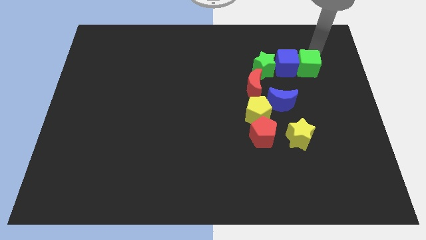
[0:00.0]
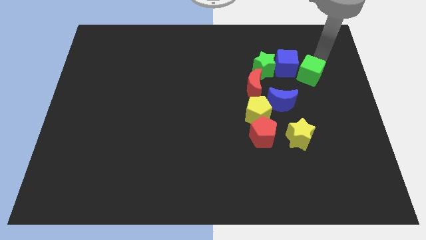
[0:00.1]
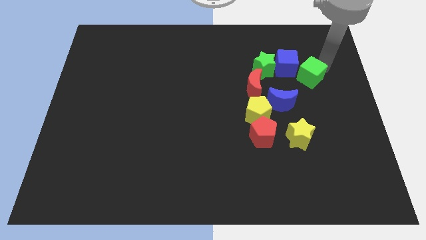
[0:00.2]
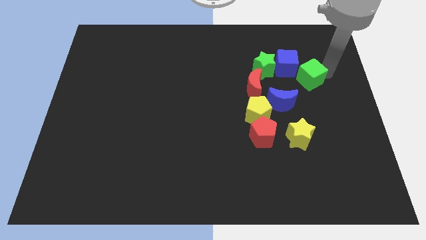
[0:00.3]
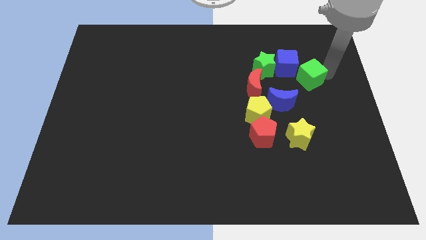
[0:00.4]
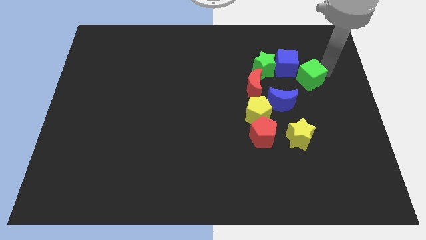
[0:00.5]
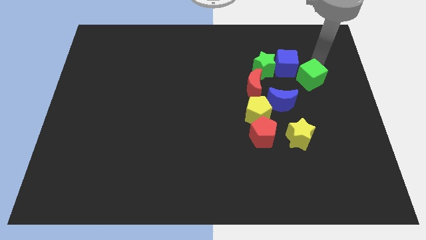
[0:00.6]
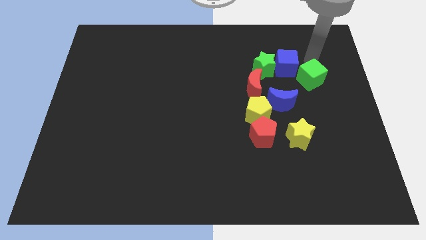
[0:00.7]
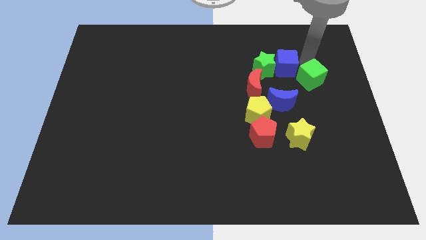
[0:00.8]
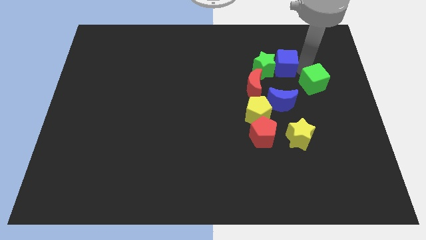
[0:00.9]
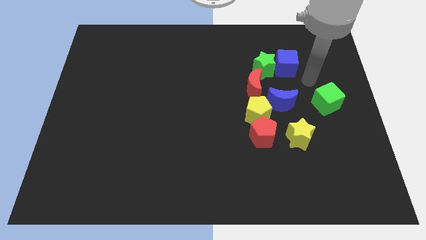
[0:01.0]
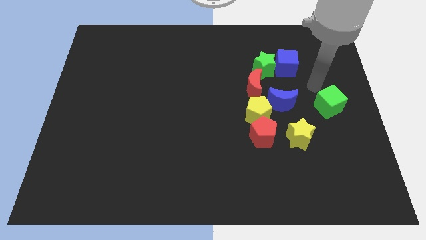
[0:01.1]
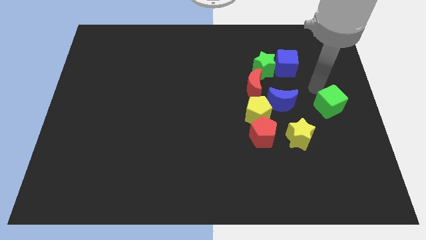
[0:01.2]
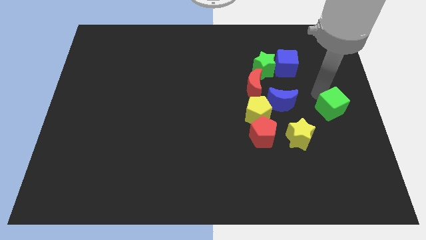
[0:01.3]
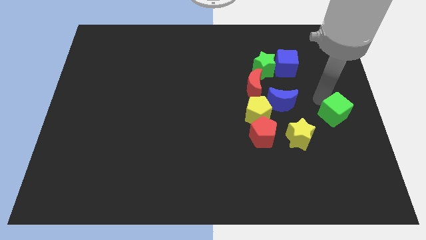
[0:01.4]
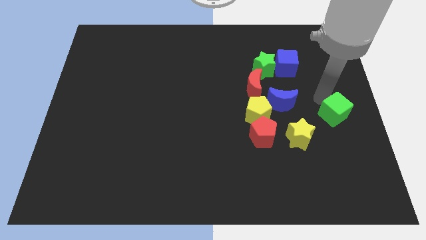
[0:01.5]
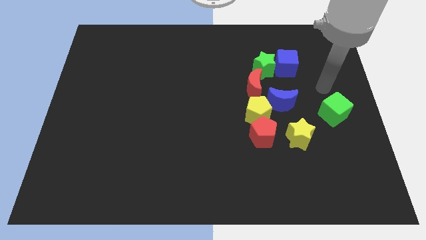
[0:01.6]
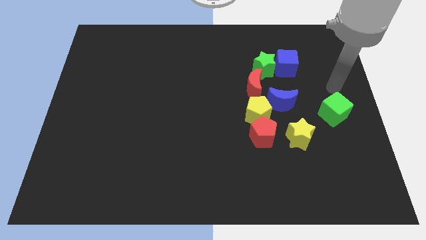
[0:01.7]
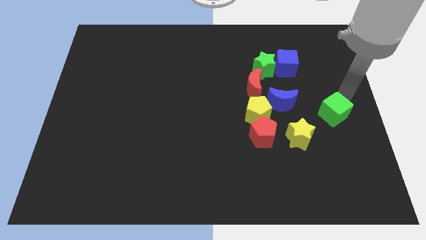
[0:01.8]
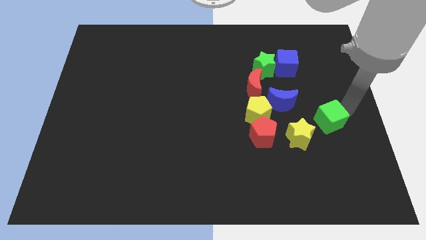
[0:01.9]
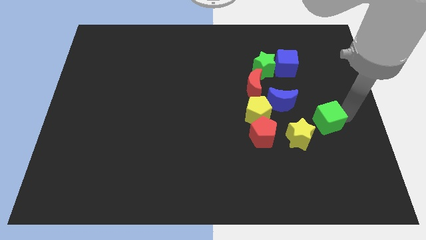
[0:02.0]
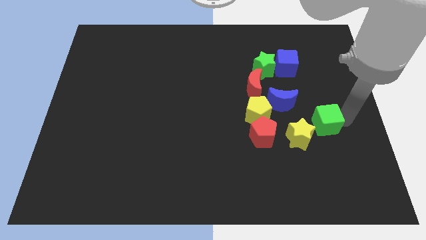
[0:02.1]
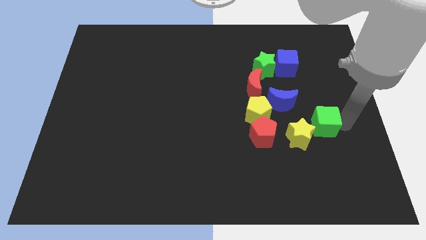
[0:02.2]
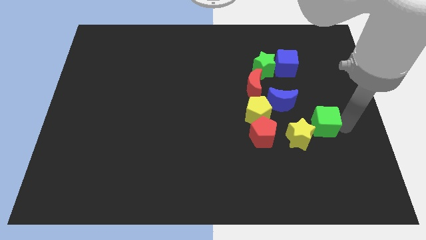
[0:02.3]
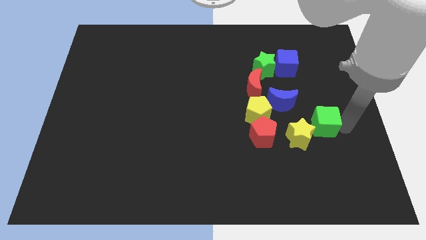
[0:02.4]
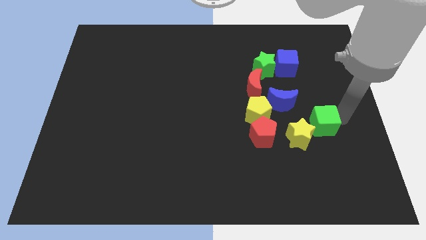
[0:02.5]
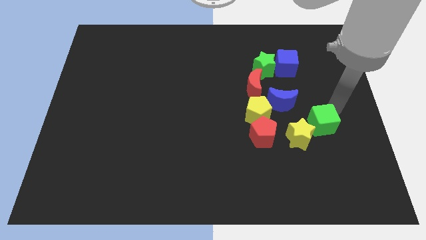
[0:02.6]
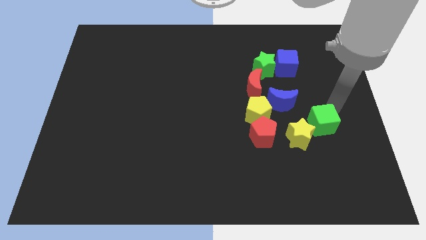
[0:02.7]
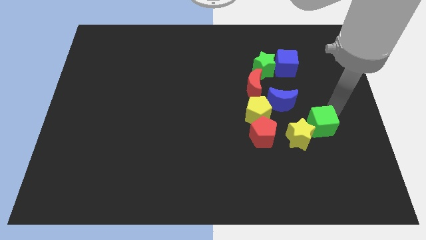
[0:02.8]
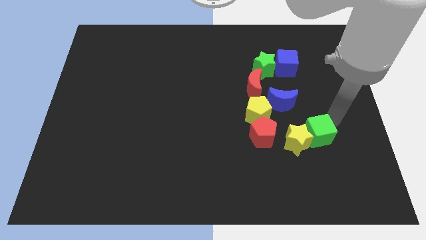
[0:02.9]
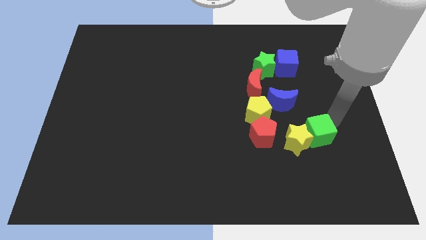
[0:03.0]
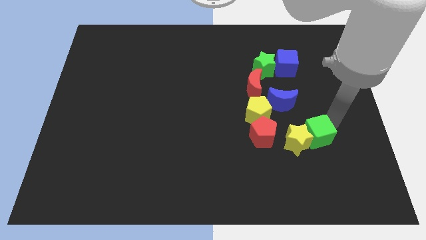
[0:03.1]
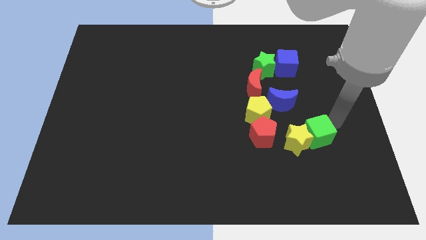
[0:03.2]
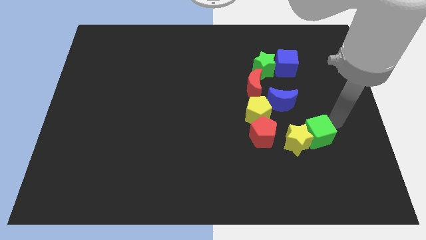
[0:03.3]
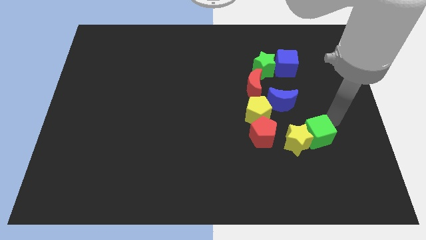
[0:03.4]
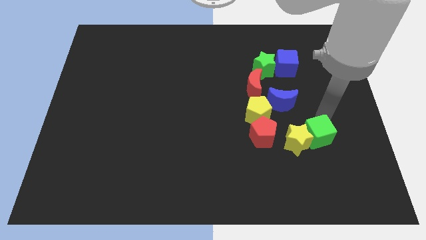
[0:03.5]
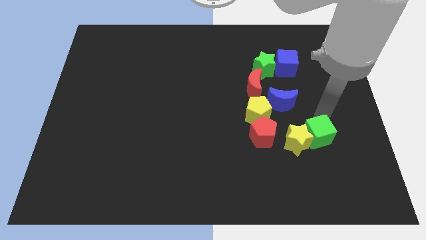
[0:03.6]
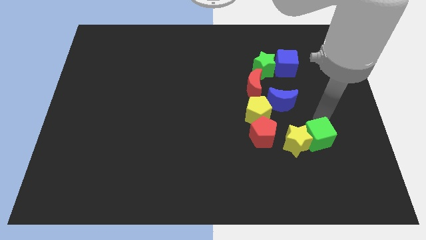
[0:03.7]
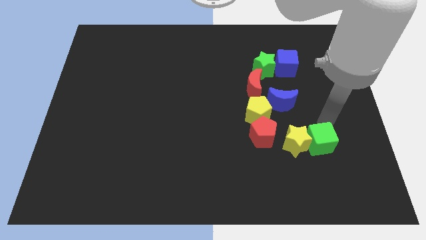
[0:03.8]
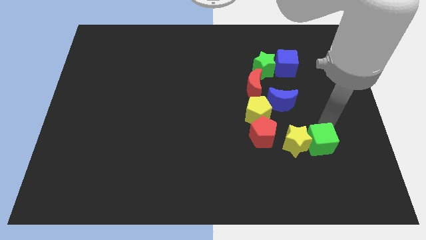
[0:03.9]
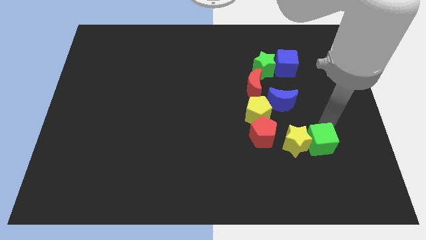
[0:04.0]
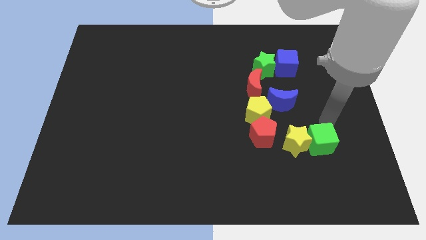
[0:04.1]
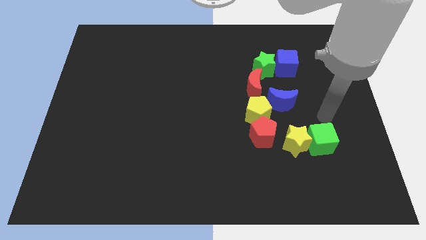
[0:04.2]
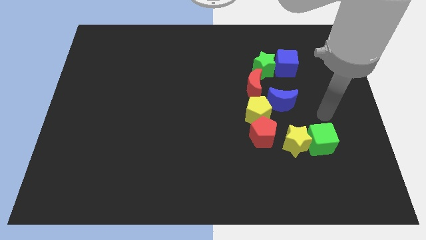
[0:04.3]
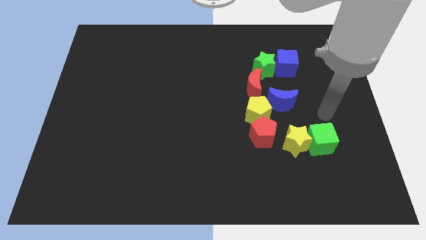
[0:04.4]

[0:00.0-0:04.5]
move the green cube to the right side of the yellow star

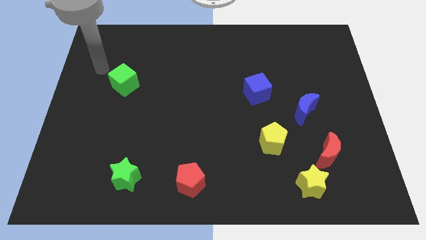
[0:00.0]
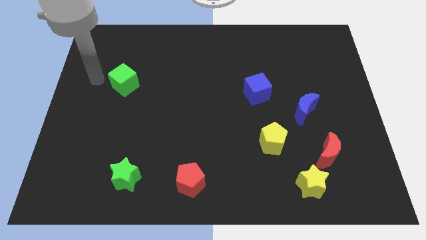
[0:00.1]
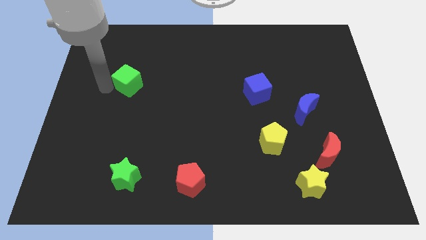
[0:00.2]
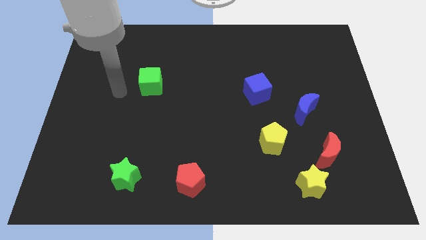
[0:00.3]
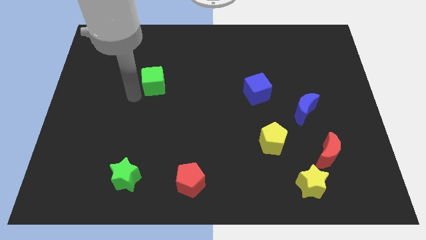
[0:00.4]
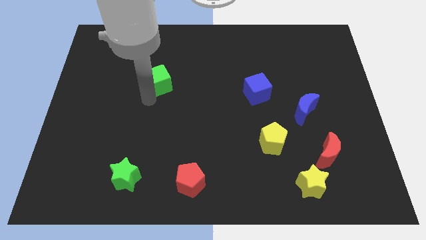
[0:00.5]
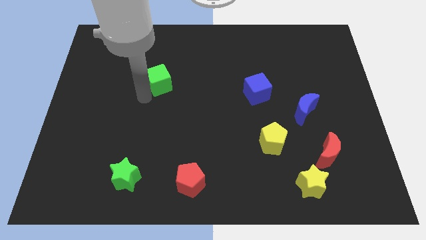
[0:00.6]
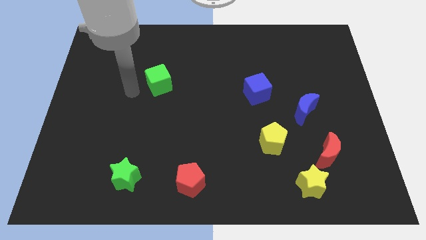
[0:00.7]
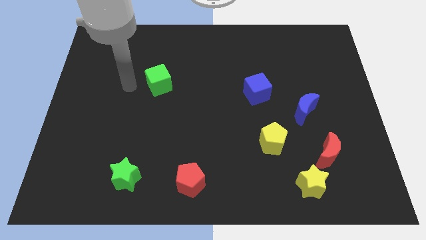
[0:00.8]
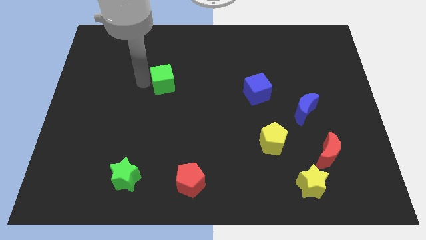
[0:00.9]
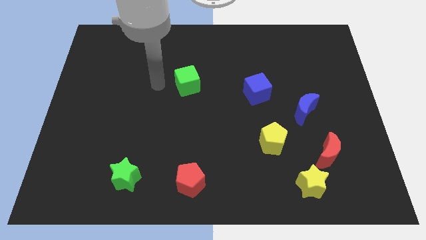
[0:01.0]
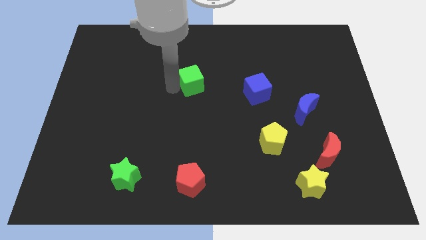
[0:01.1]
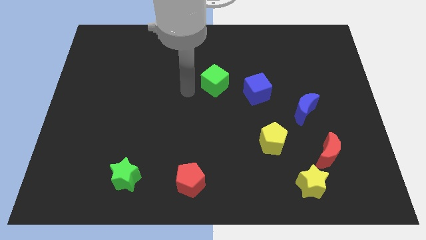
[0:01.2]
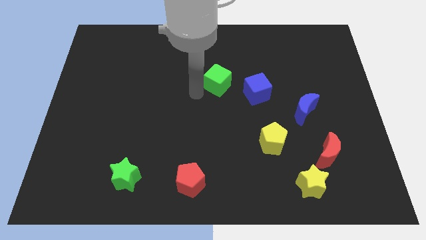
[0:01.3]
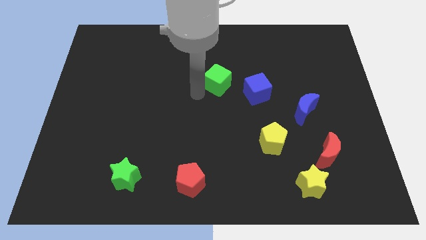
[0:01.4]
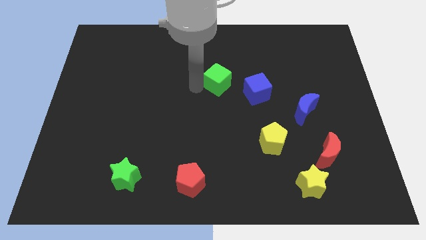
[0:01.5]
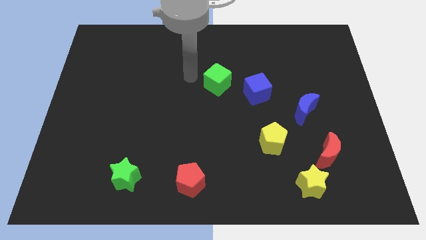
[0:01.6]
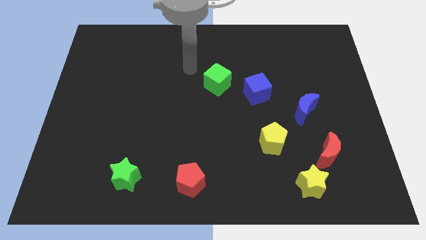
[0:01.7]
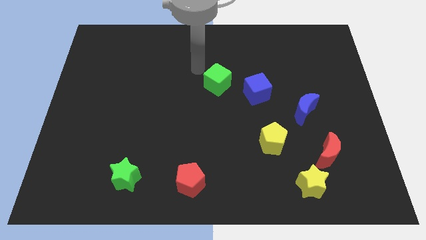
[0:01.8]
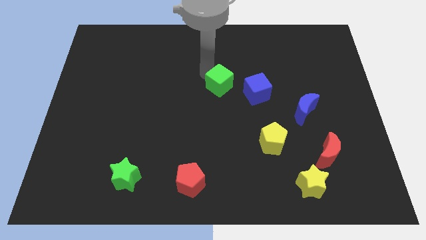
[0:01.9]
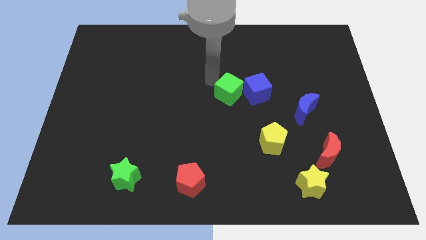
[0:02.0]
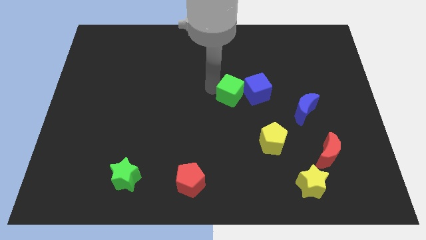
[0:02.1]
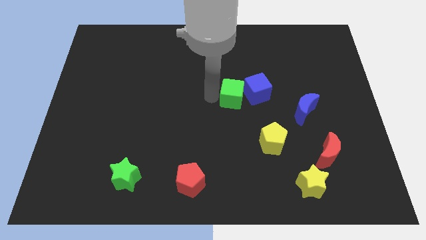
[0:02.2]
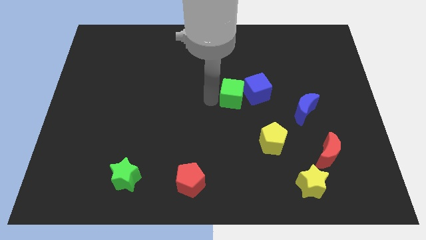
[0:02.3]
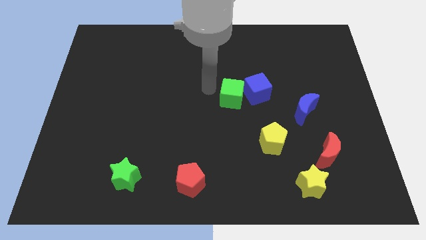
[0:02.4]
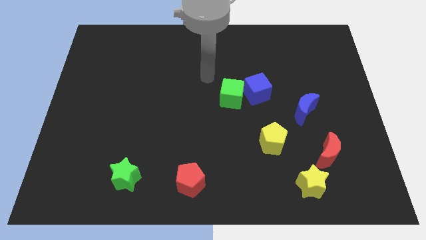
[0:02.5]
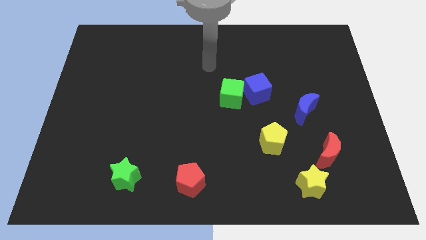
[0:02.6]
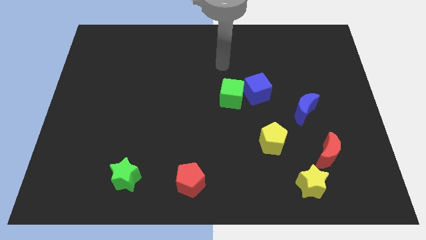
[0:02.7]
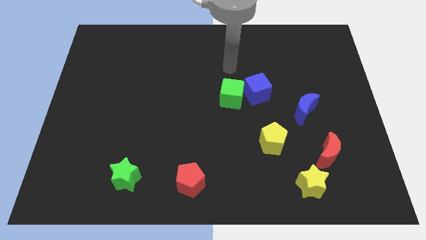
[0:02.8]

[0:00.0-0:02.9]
push the green cube to the left of the blue cube

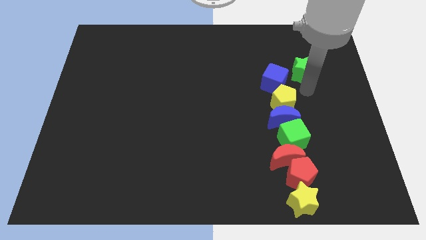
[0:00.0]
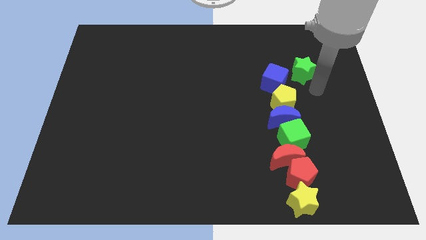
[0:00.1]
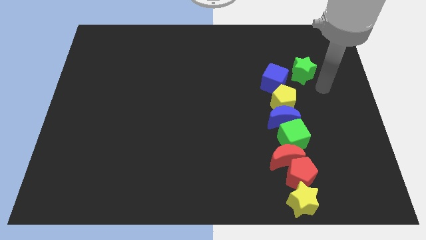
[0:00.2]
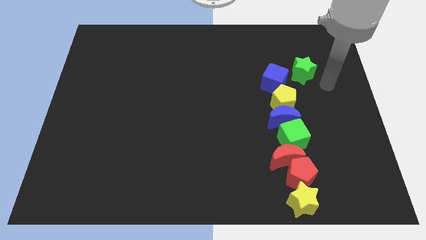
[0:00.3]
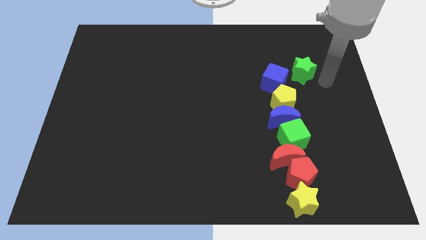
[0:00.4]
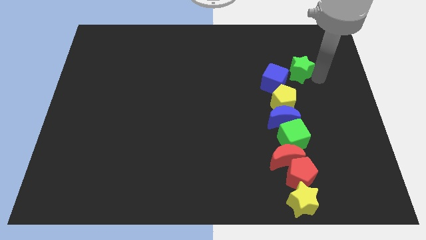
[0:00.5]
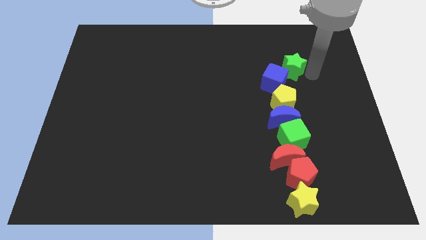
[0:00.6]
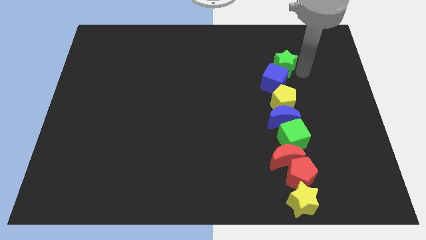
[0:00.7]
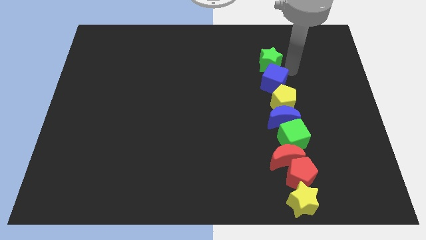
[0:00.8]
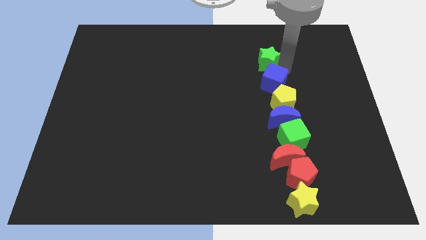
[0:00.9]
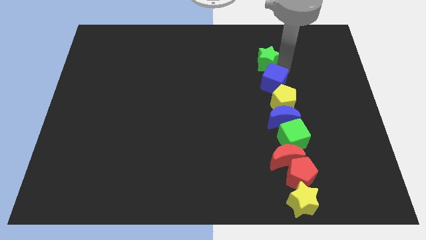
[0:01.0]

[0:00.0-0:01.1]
push the green star towards the top left side of the board

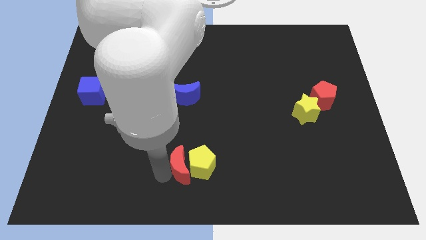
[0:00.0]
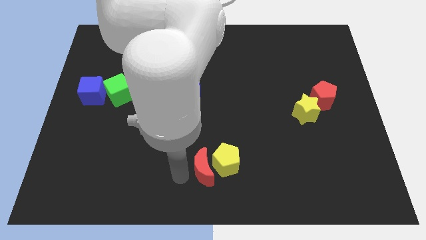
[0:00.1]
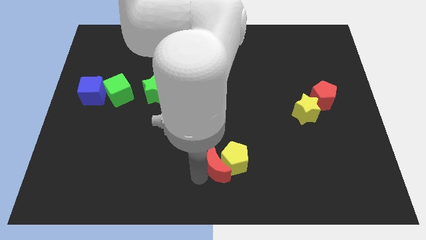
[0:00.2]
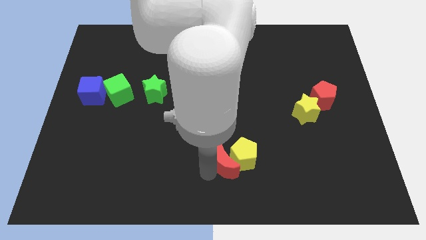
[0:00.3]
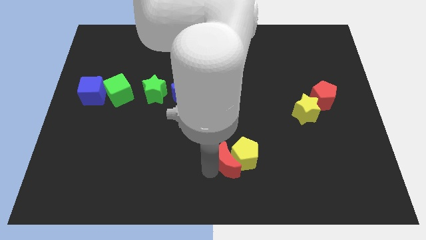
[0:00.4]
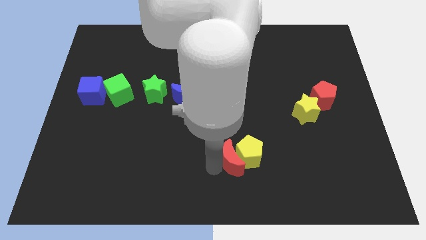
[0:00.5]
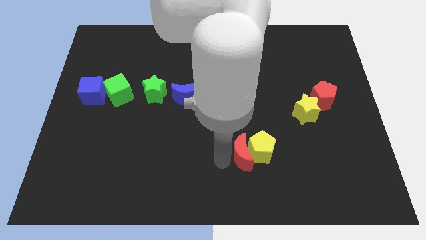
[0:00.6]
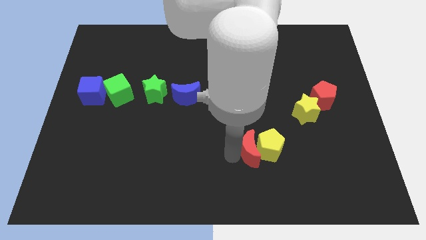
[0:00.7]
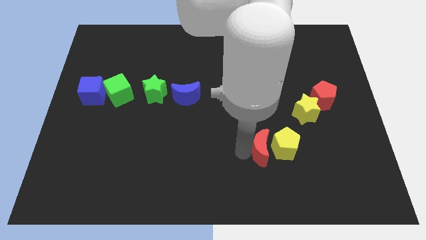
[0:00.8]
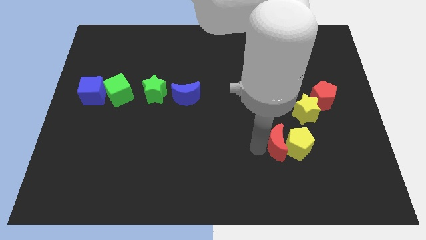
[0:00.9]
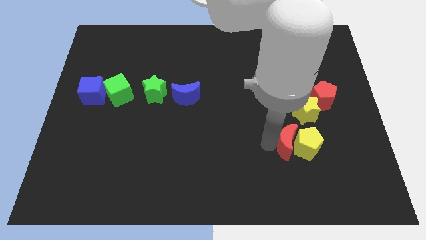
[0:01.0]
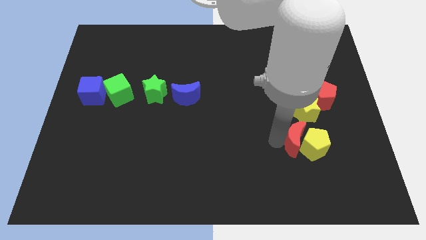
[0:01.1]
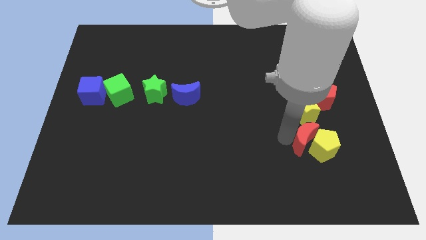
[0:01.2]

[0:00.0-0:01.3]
move the red moon into the yellow pentagon
